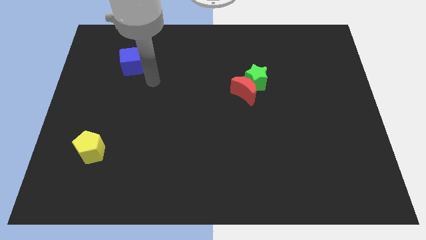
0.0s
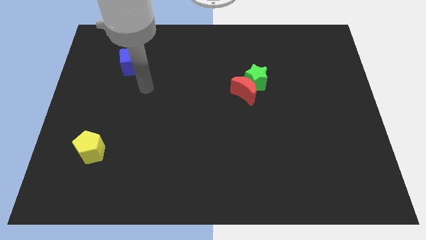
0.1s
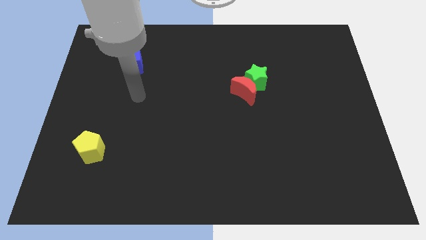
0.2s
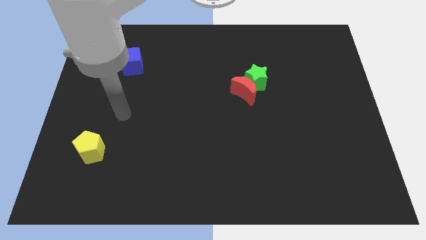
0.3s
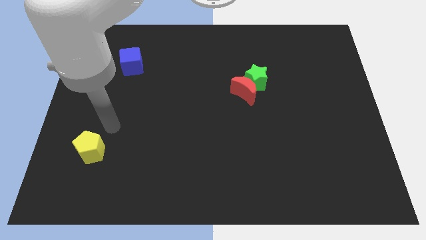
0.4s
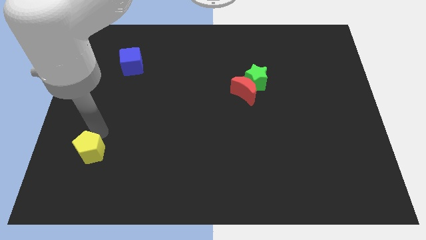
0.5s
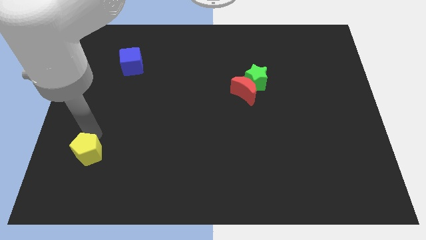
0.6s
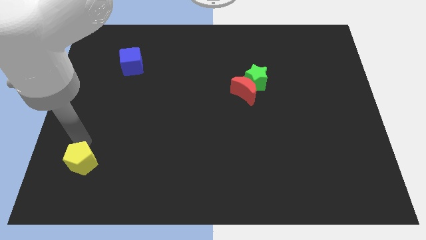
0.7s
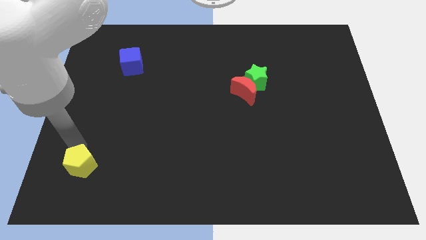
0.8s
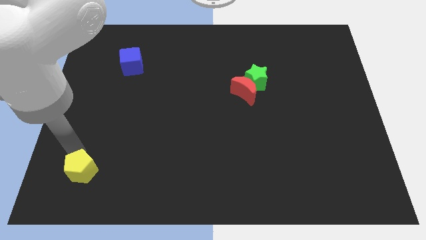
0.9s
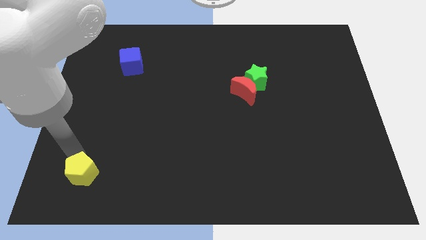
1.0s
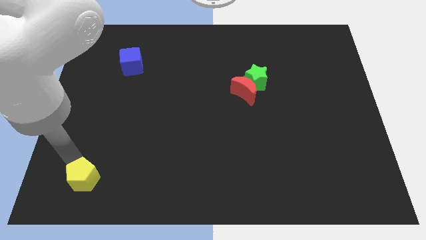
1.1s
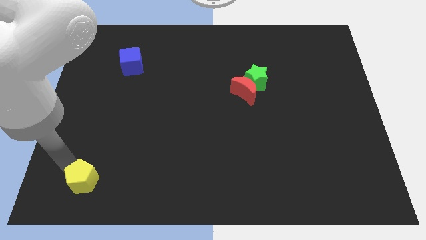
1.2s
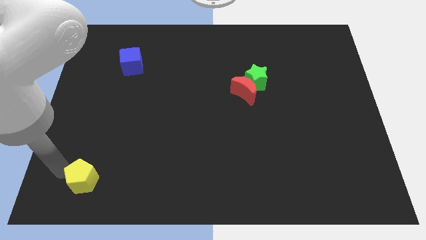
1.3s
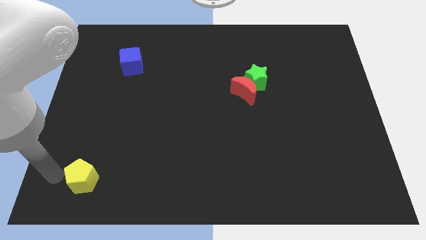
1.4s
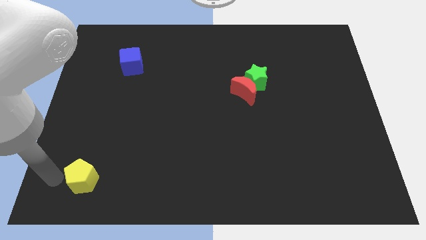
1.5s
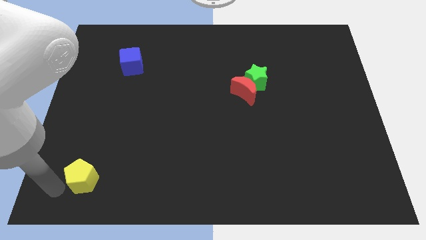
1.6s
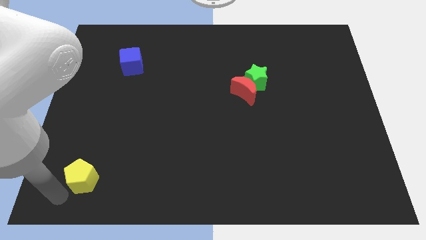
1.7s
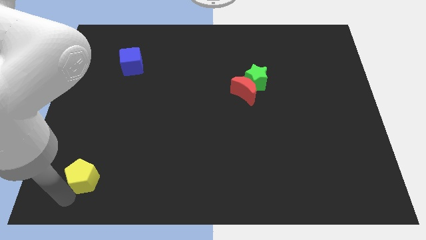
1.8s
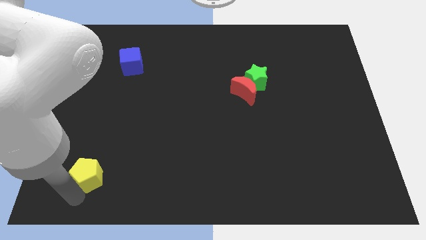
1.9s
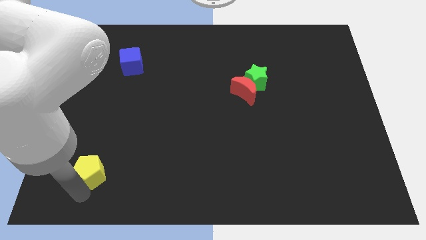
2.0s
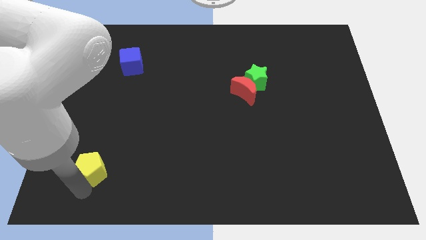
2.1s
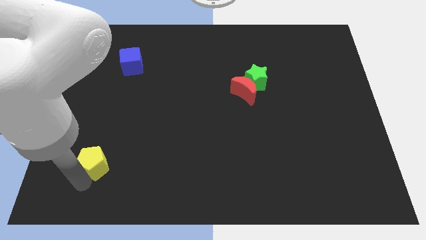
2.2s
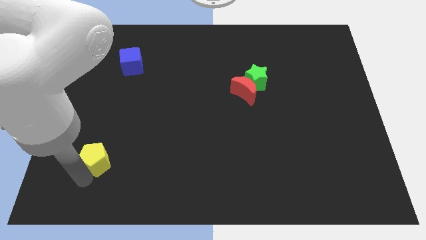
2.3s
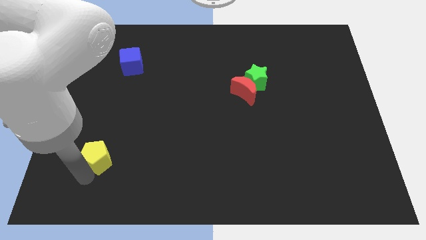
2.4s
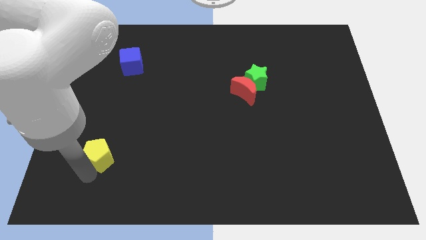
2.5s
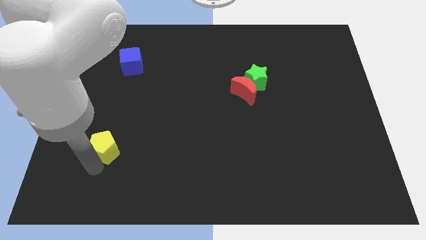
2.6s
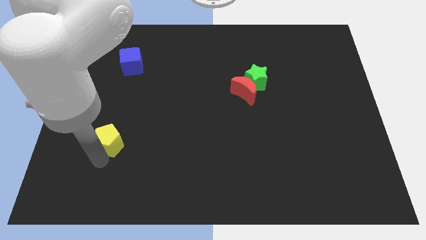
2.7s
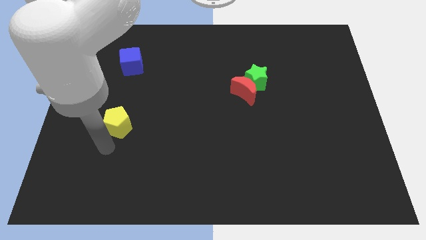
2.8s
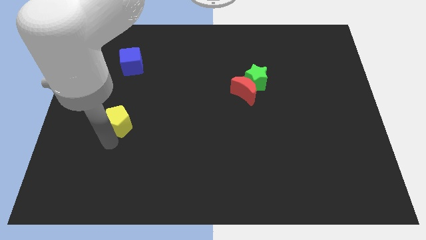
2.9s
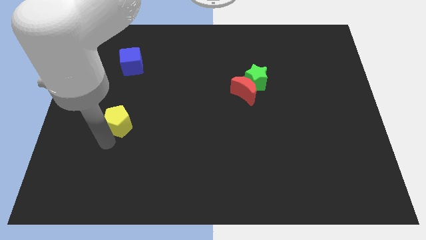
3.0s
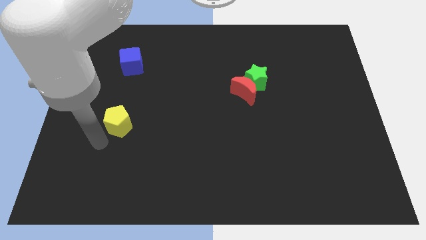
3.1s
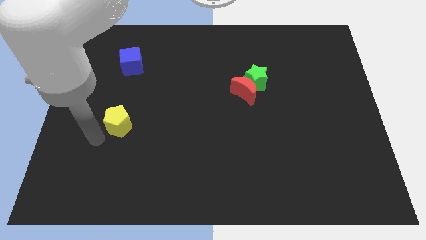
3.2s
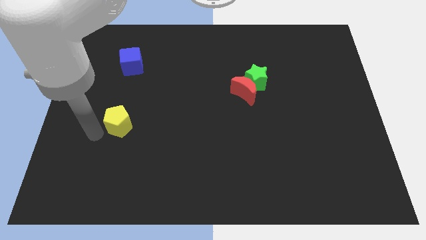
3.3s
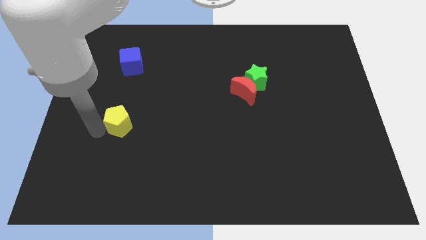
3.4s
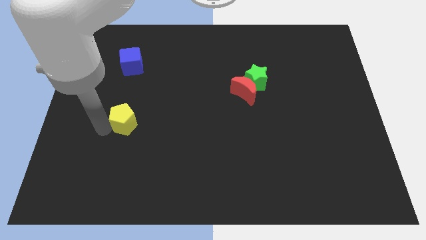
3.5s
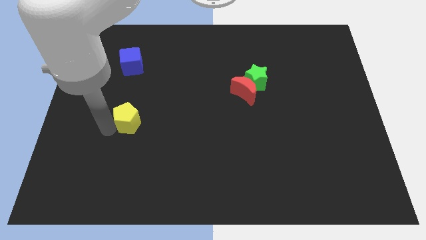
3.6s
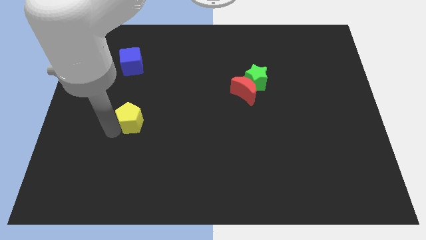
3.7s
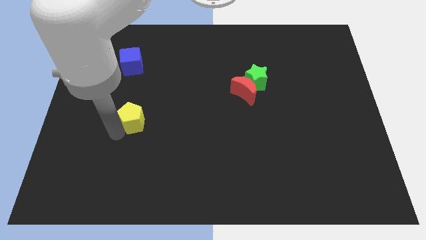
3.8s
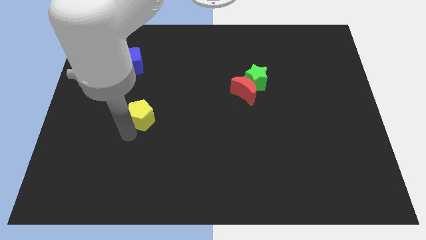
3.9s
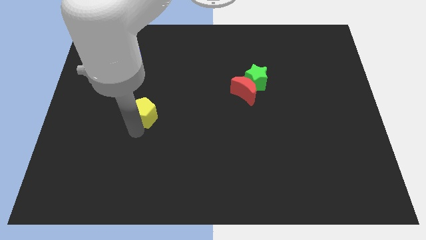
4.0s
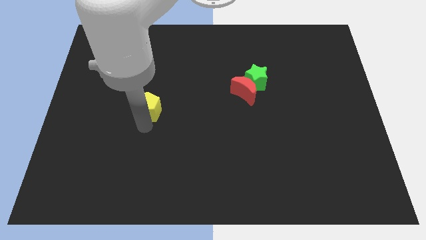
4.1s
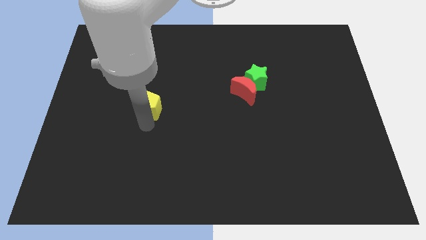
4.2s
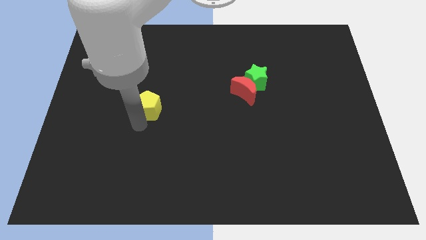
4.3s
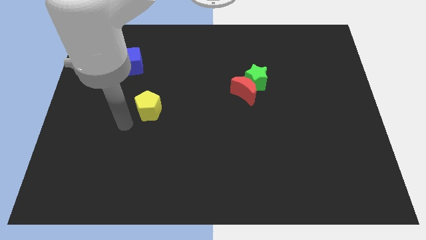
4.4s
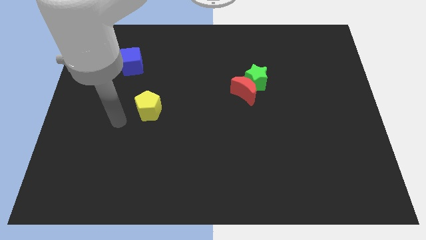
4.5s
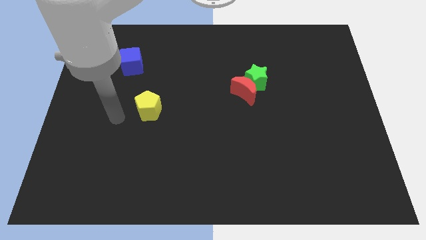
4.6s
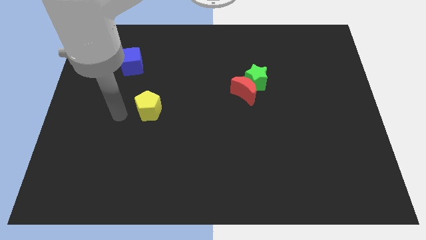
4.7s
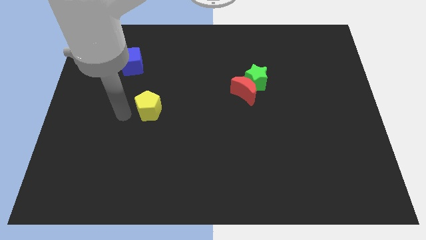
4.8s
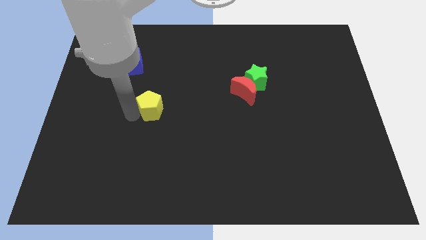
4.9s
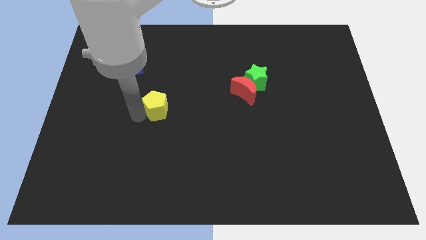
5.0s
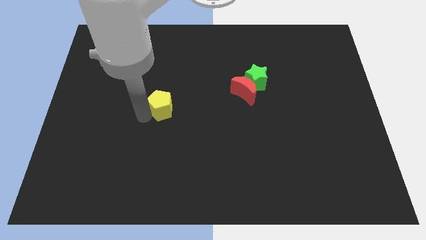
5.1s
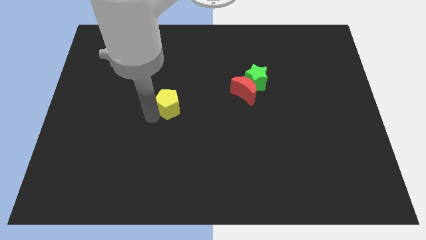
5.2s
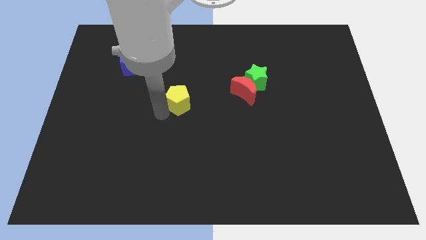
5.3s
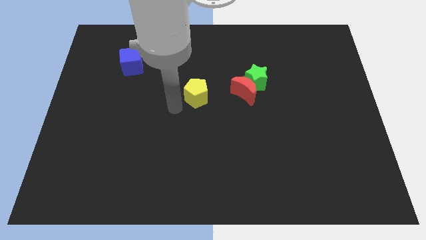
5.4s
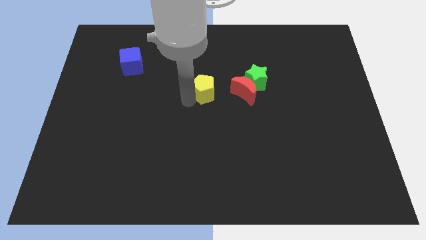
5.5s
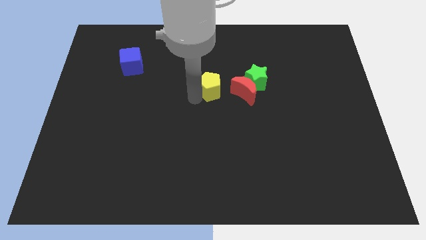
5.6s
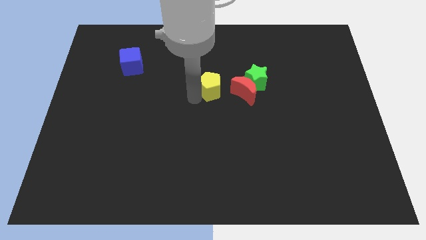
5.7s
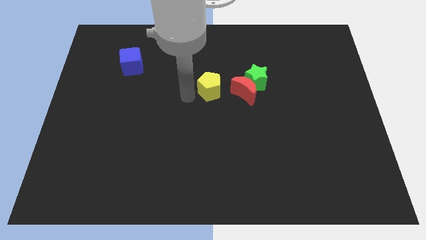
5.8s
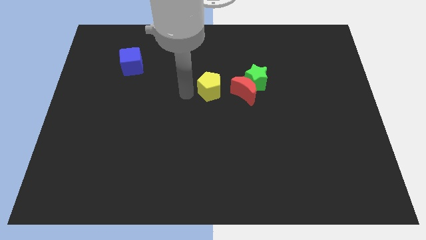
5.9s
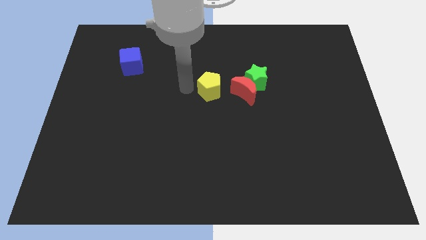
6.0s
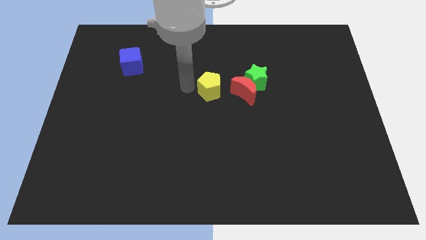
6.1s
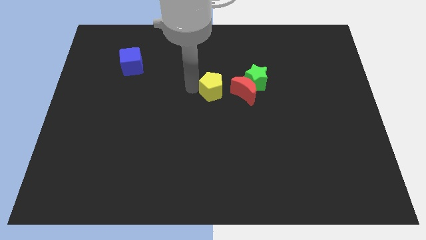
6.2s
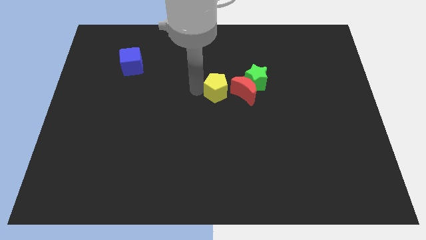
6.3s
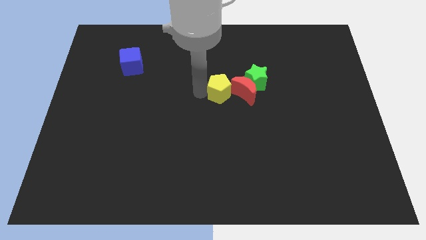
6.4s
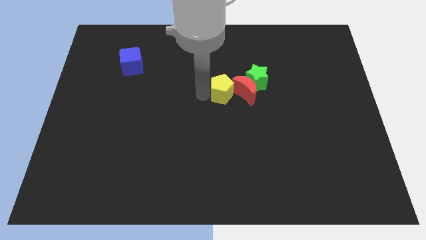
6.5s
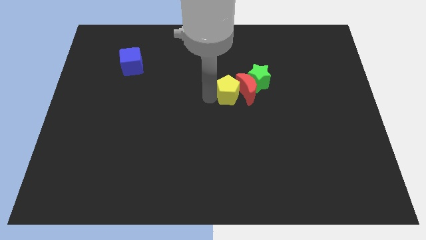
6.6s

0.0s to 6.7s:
put the yellow block to the moon

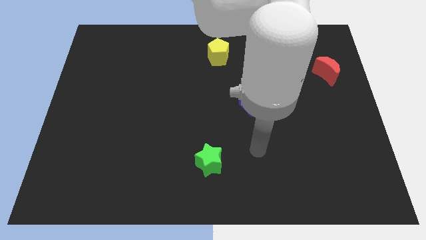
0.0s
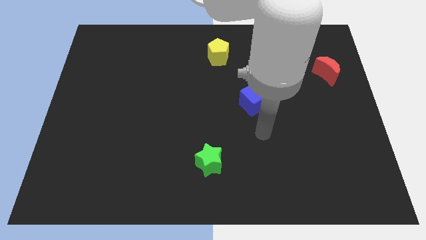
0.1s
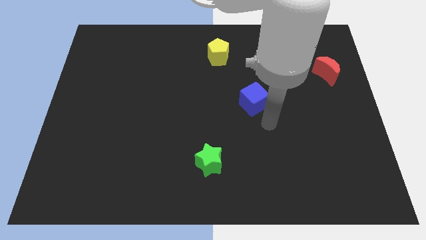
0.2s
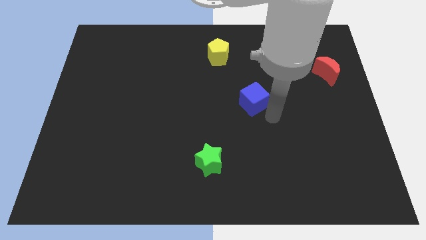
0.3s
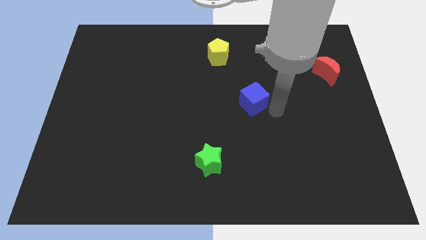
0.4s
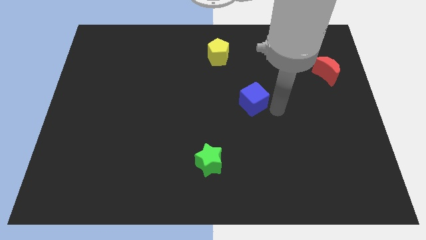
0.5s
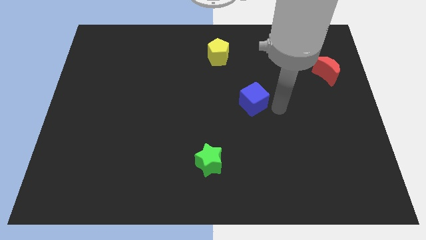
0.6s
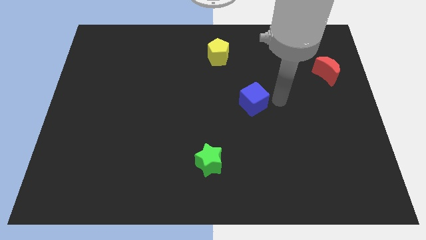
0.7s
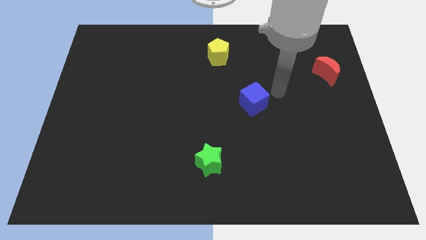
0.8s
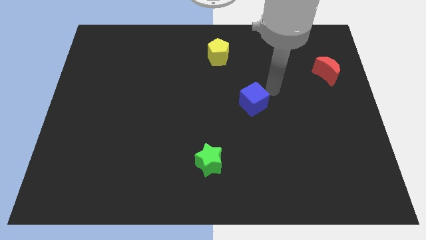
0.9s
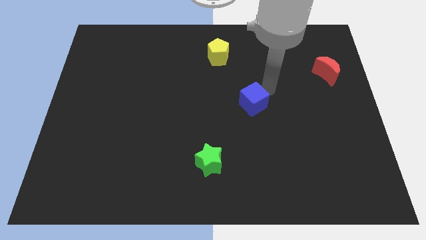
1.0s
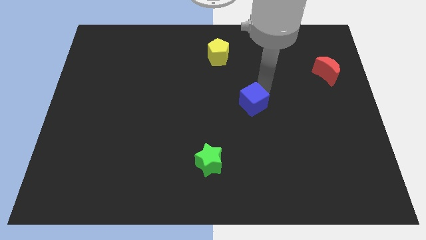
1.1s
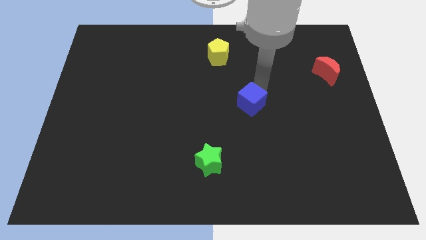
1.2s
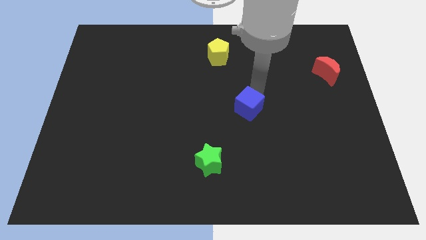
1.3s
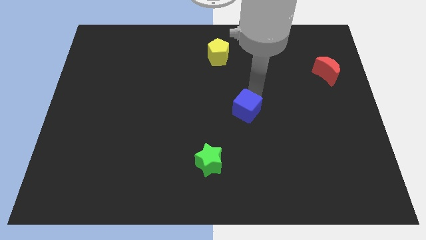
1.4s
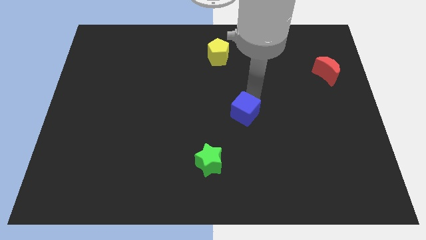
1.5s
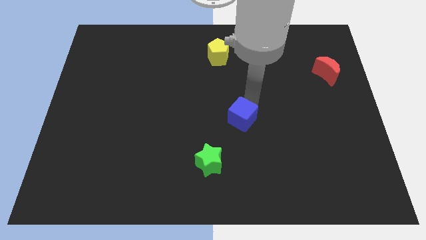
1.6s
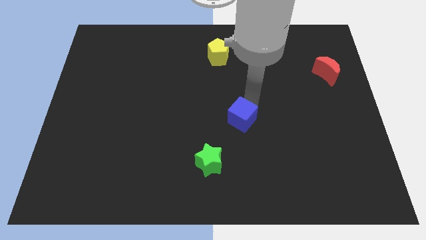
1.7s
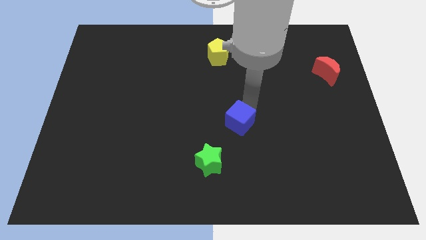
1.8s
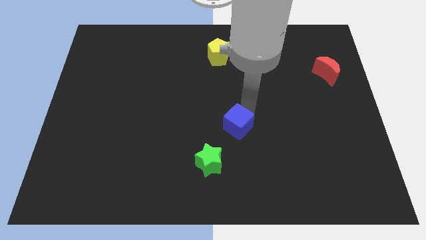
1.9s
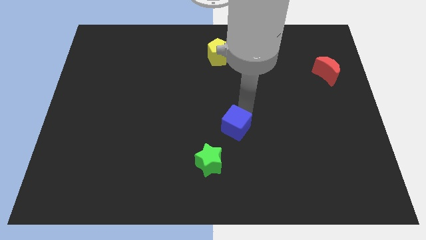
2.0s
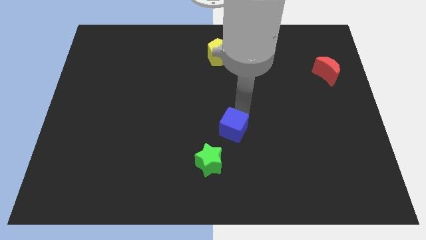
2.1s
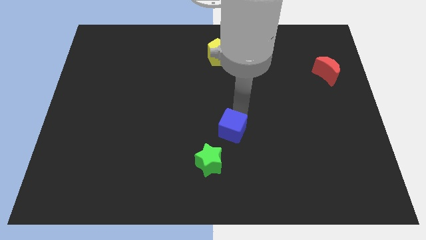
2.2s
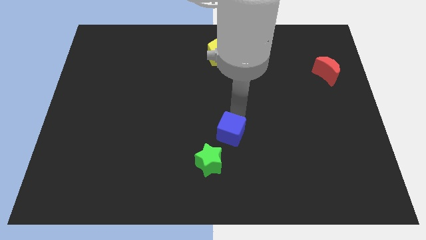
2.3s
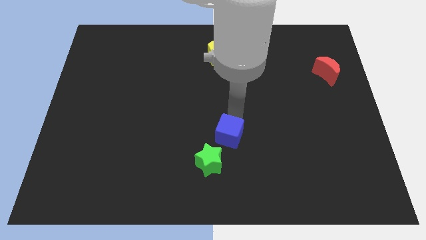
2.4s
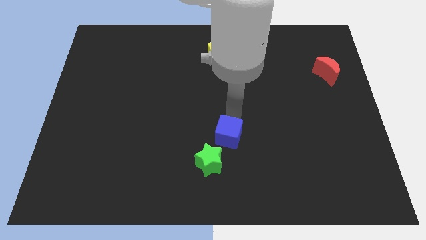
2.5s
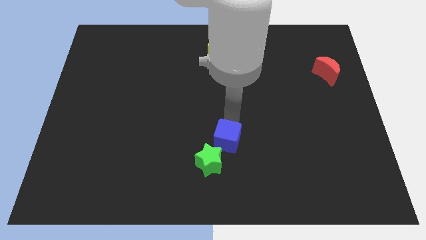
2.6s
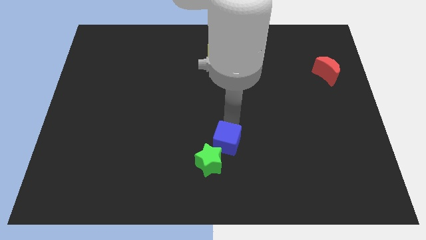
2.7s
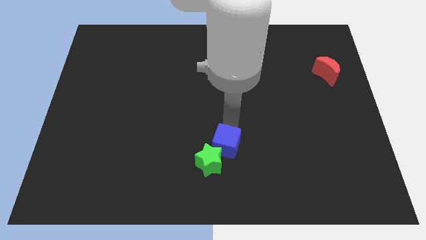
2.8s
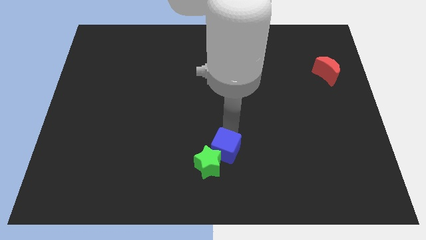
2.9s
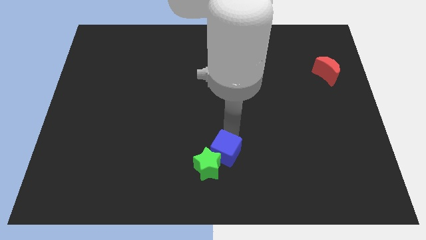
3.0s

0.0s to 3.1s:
put the blue cube to the green block
